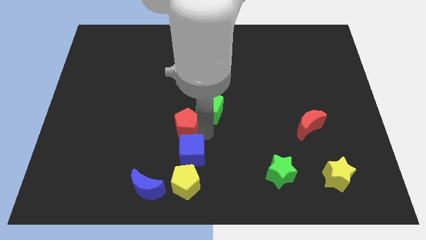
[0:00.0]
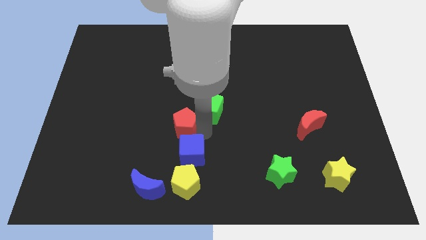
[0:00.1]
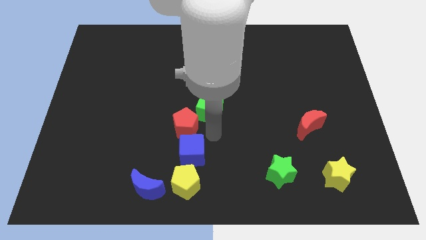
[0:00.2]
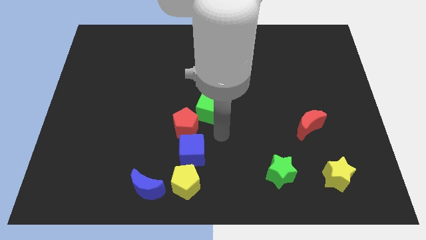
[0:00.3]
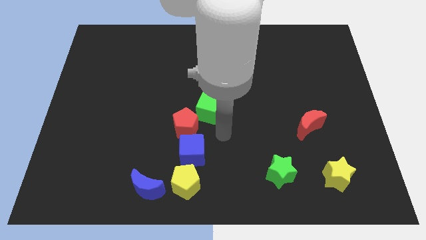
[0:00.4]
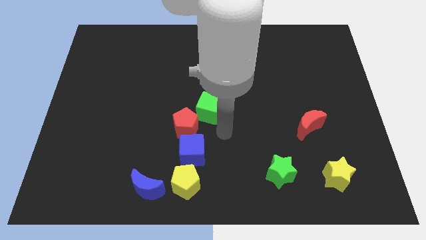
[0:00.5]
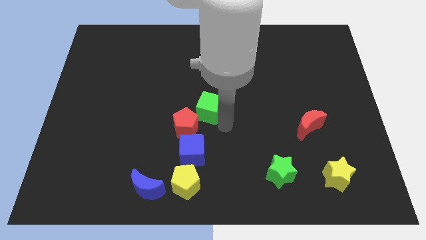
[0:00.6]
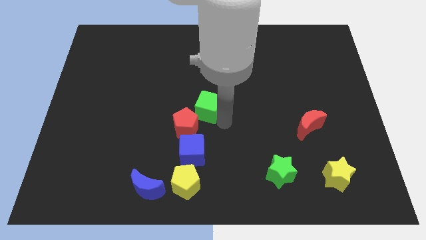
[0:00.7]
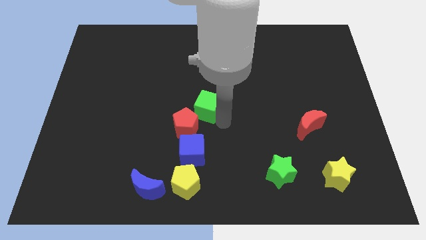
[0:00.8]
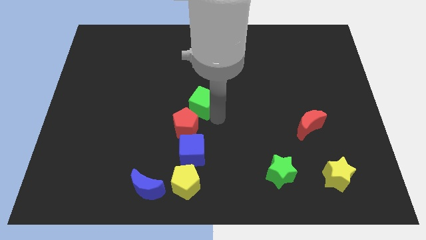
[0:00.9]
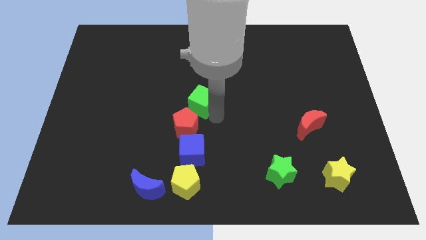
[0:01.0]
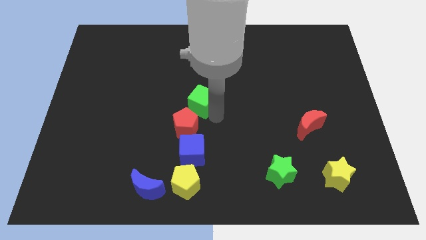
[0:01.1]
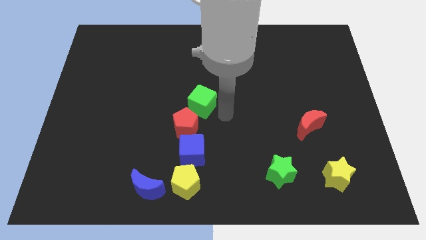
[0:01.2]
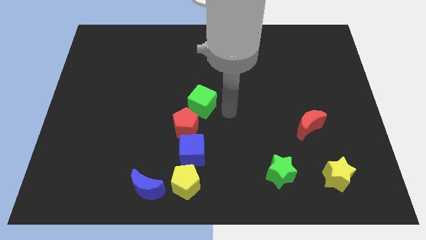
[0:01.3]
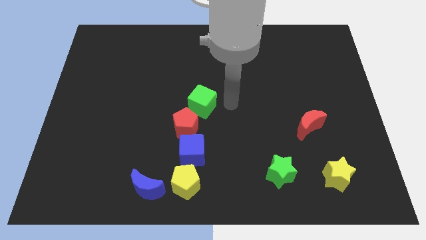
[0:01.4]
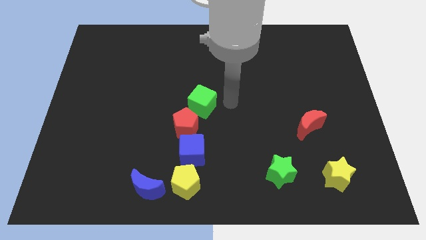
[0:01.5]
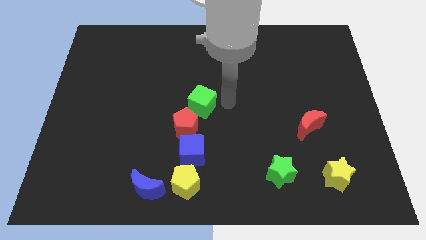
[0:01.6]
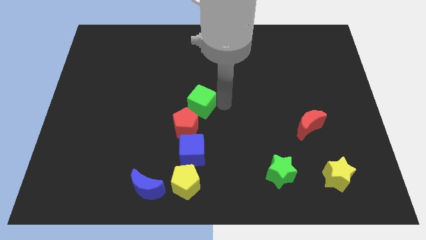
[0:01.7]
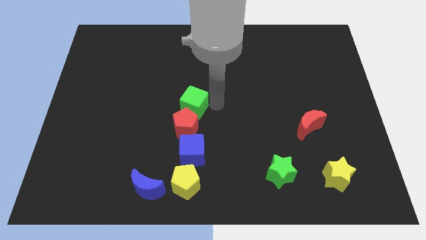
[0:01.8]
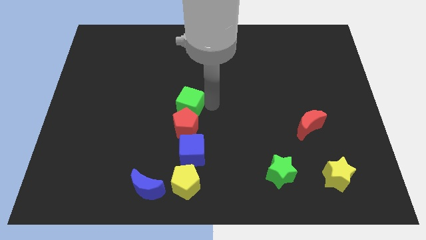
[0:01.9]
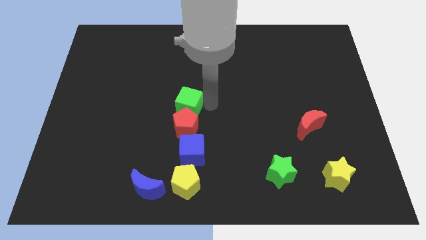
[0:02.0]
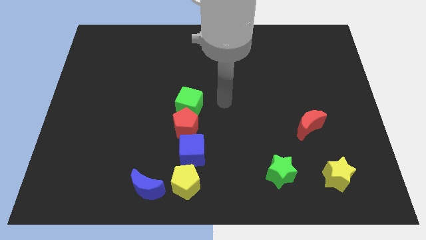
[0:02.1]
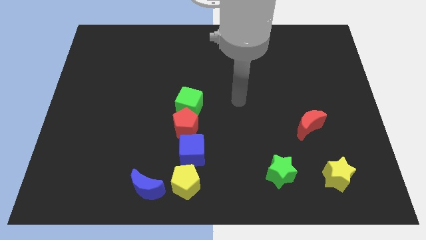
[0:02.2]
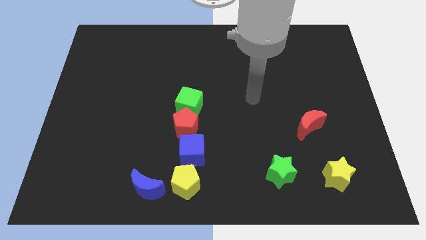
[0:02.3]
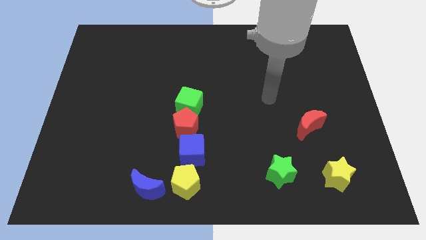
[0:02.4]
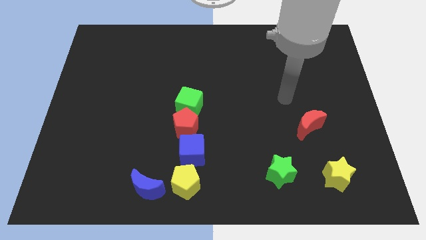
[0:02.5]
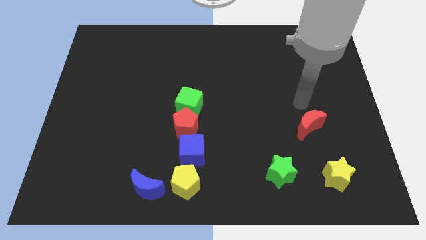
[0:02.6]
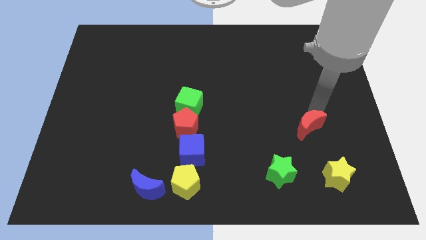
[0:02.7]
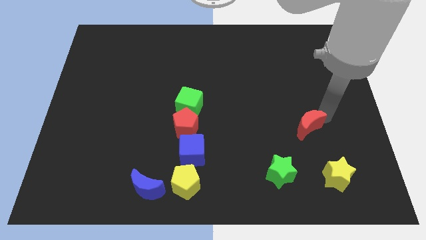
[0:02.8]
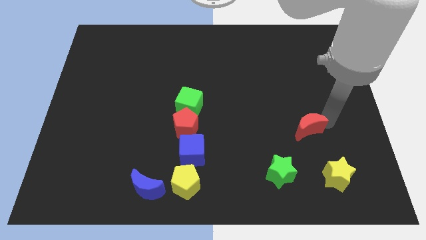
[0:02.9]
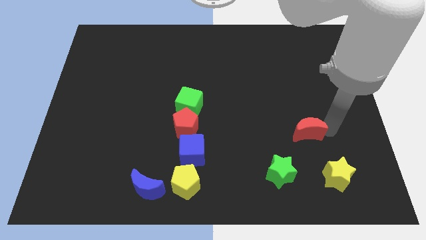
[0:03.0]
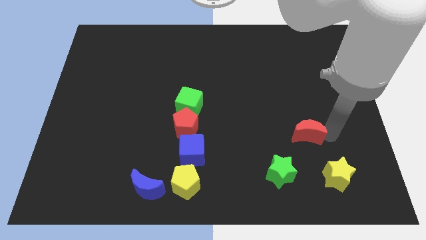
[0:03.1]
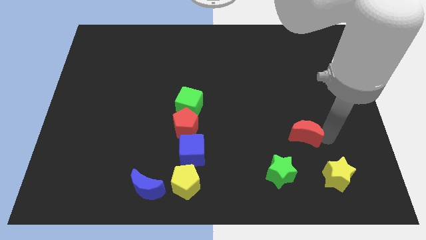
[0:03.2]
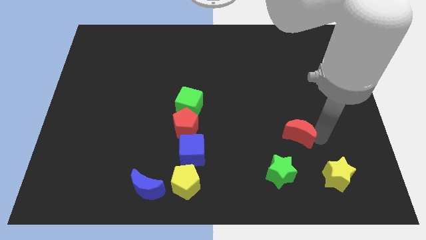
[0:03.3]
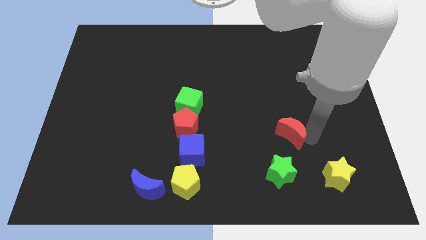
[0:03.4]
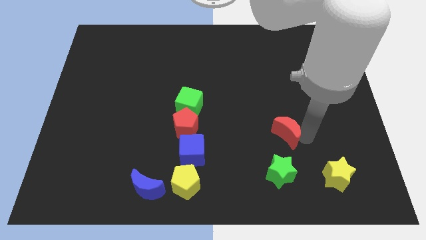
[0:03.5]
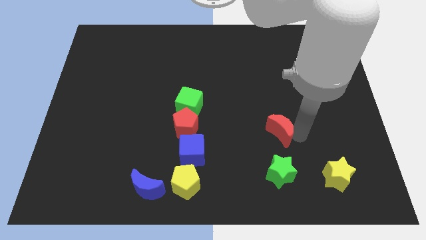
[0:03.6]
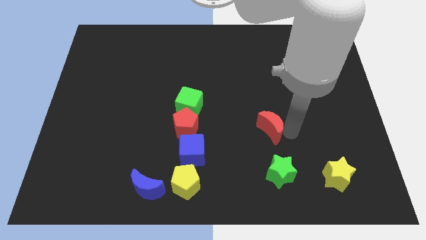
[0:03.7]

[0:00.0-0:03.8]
place red crescent above green star

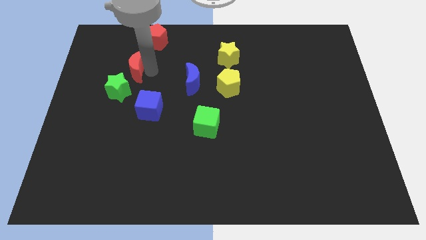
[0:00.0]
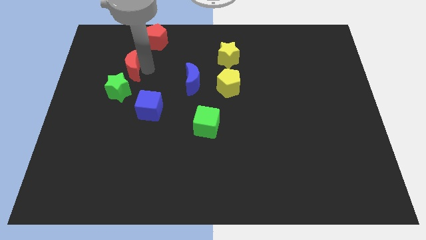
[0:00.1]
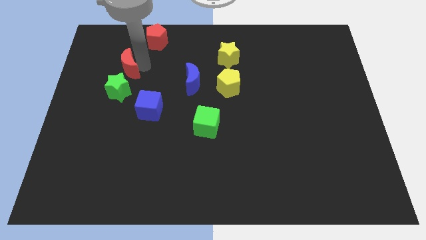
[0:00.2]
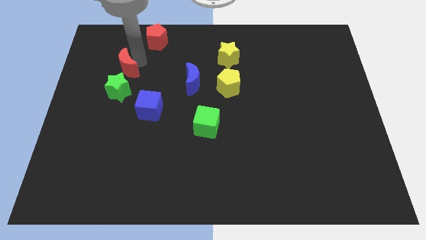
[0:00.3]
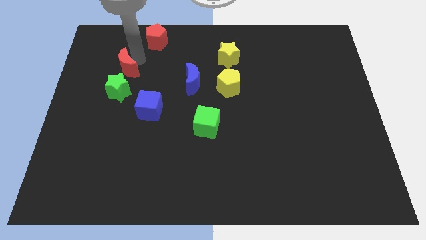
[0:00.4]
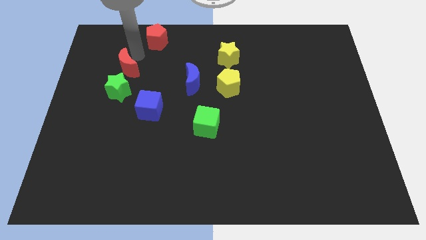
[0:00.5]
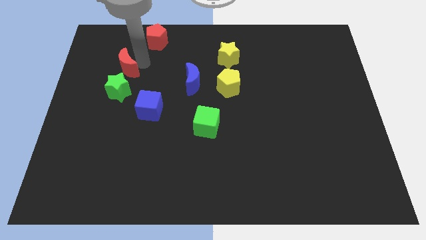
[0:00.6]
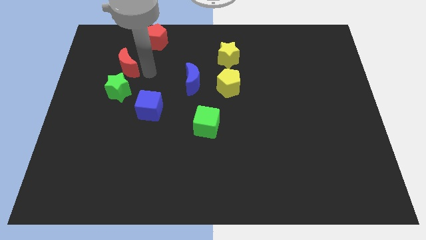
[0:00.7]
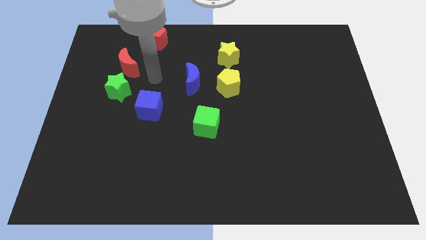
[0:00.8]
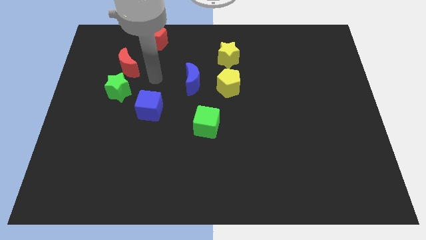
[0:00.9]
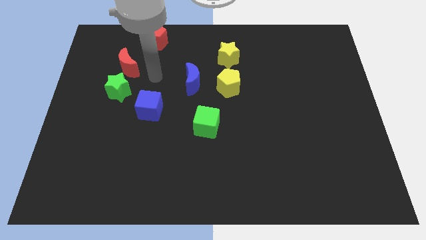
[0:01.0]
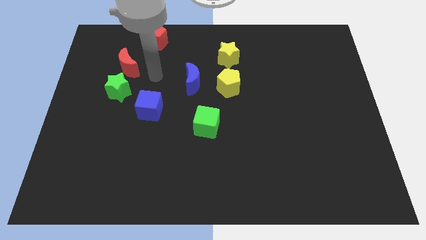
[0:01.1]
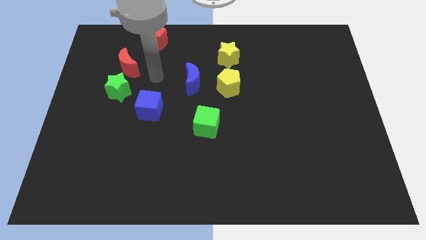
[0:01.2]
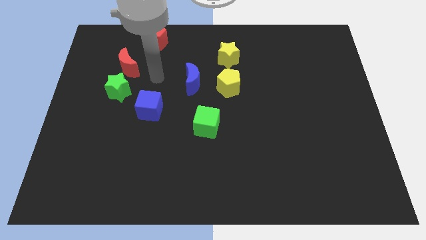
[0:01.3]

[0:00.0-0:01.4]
push red crescent slightly towards left

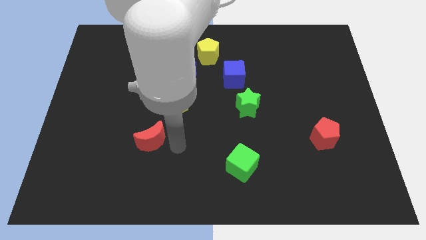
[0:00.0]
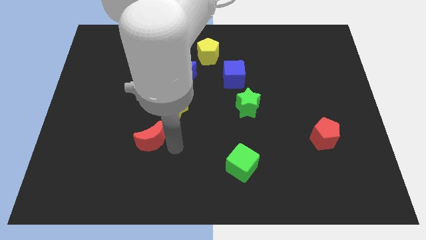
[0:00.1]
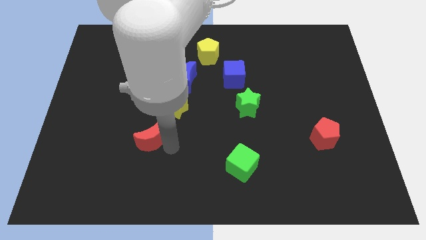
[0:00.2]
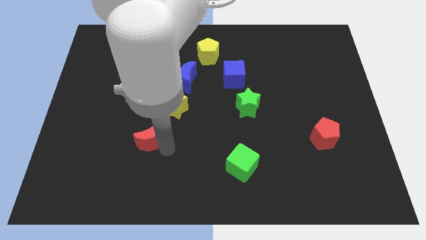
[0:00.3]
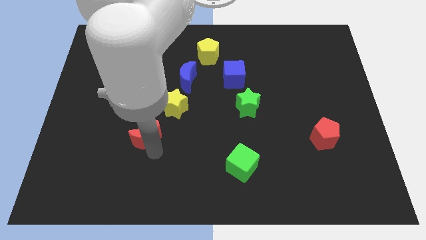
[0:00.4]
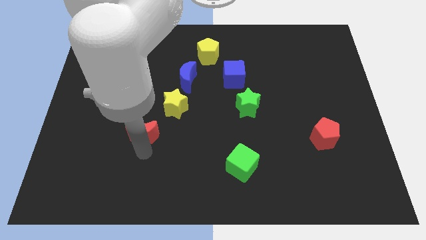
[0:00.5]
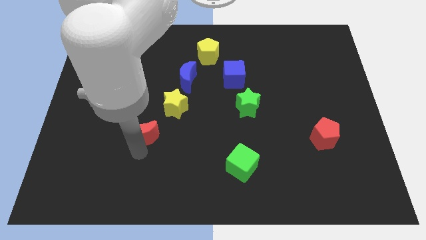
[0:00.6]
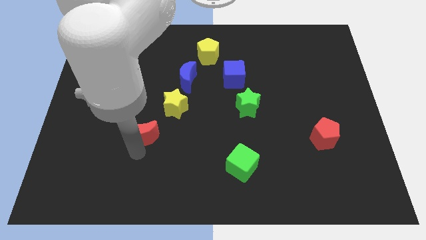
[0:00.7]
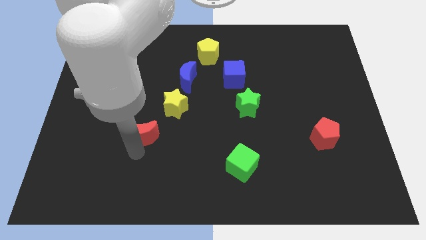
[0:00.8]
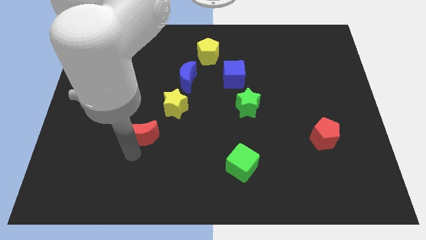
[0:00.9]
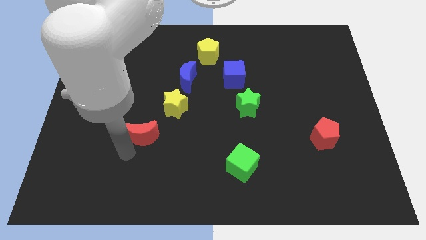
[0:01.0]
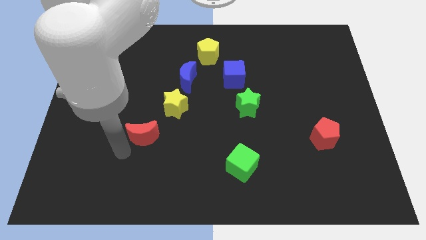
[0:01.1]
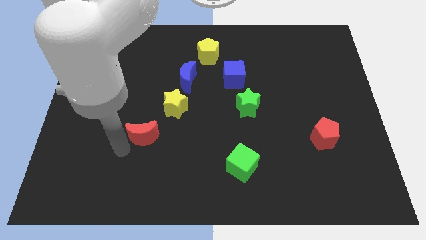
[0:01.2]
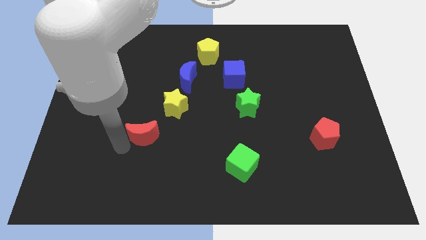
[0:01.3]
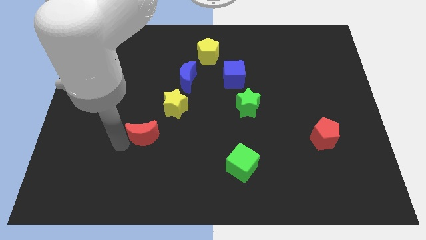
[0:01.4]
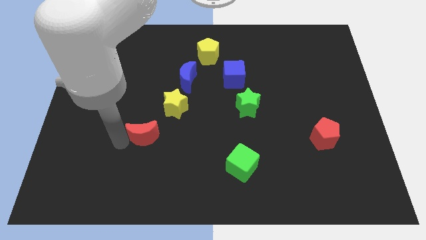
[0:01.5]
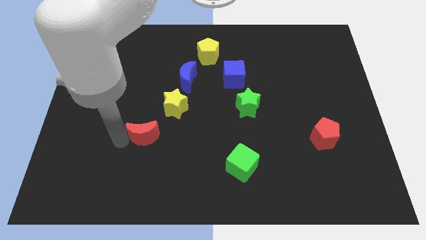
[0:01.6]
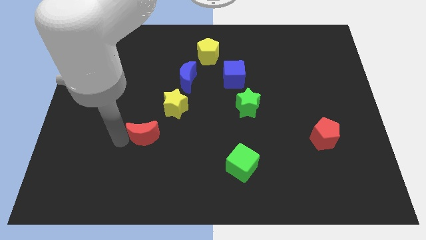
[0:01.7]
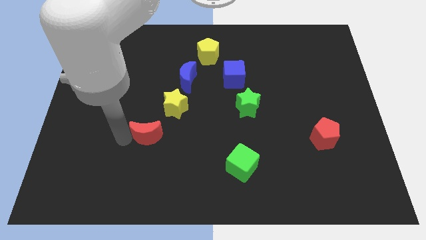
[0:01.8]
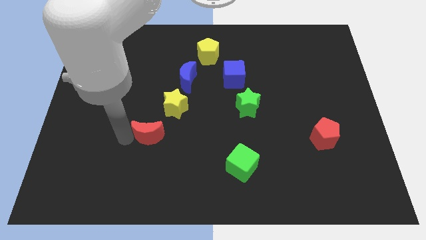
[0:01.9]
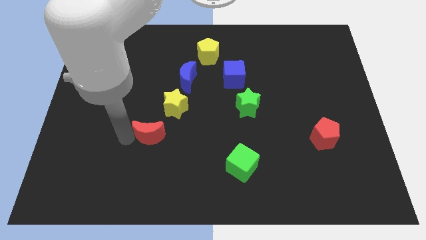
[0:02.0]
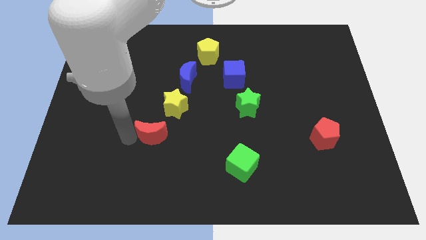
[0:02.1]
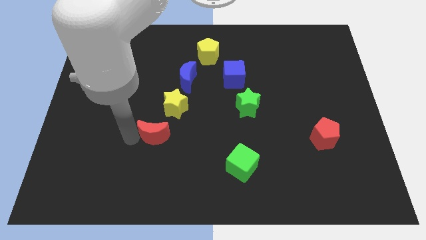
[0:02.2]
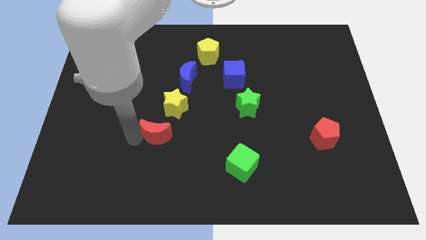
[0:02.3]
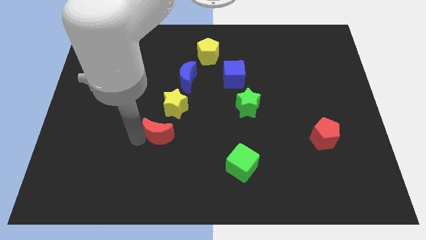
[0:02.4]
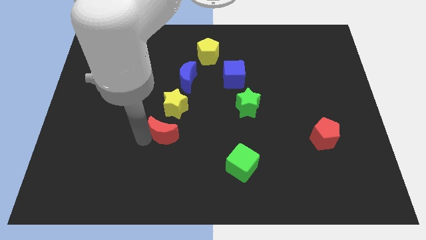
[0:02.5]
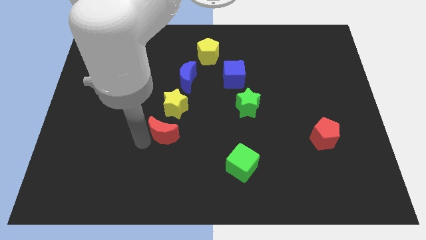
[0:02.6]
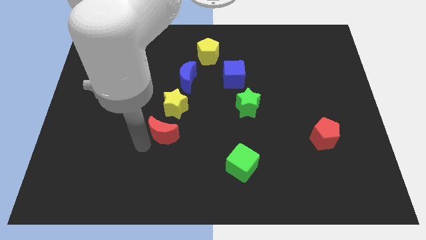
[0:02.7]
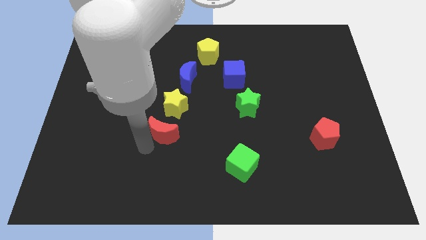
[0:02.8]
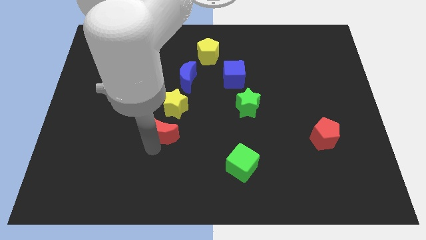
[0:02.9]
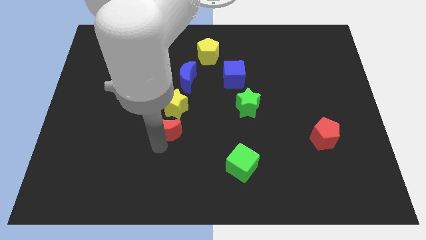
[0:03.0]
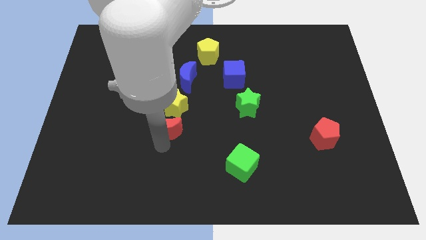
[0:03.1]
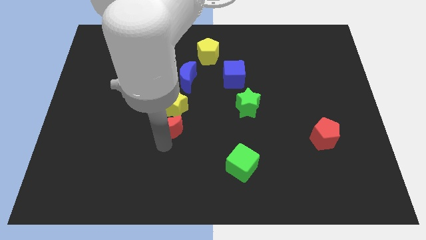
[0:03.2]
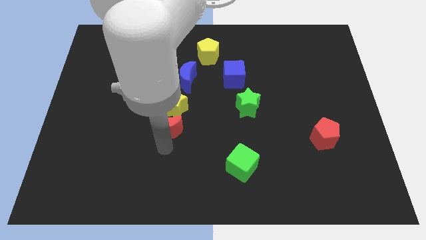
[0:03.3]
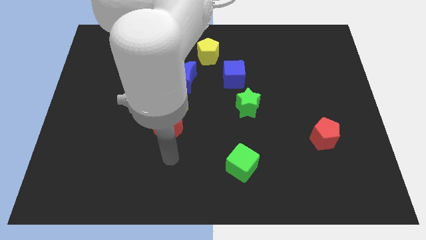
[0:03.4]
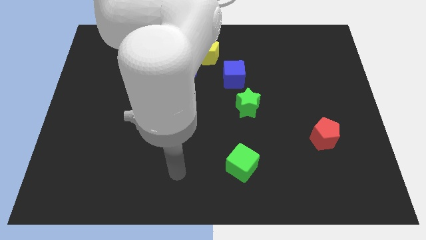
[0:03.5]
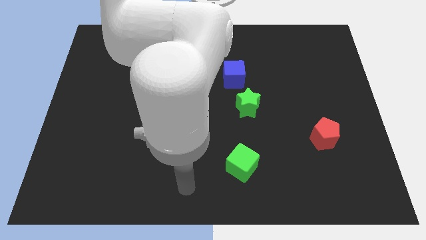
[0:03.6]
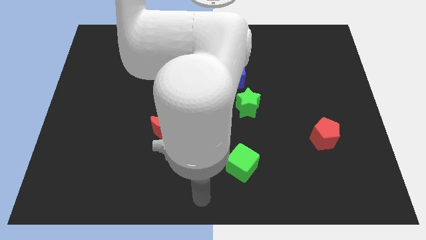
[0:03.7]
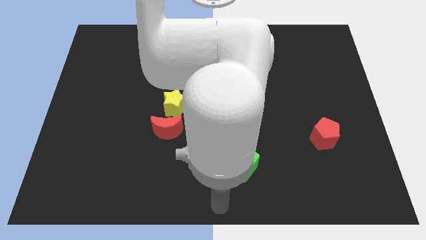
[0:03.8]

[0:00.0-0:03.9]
push the red crescent below yellow star
